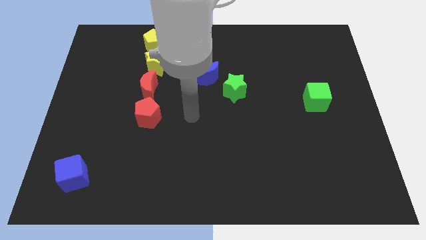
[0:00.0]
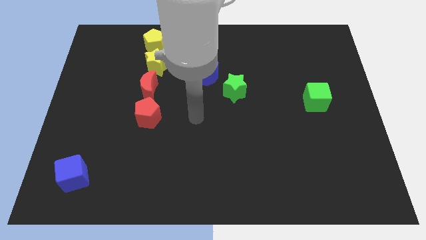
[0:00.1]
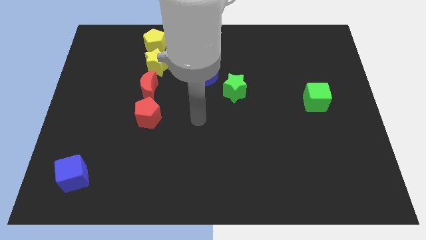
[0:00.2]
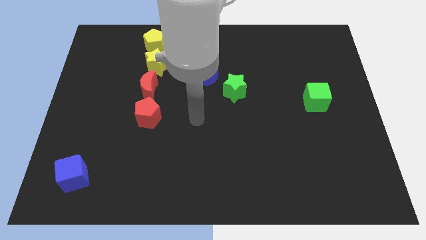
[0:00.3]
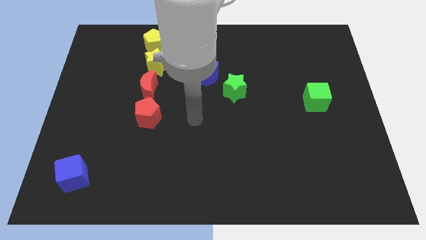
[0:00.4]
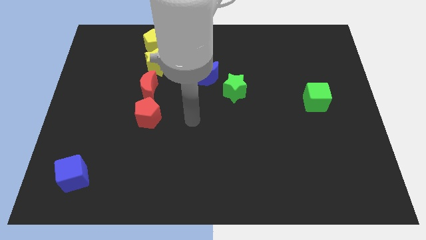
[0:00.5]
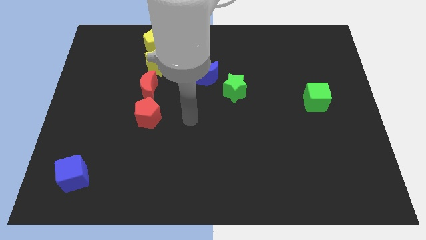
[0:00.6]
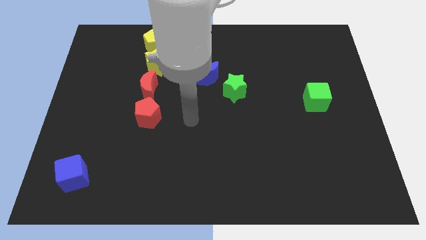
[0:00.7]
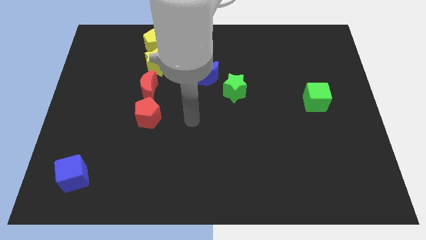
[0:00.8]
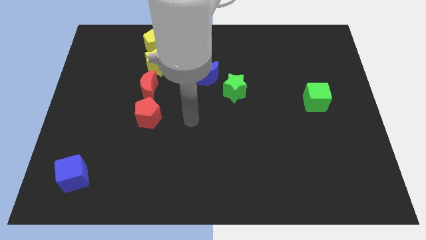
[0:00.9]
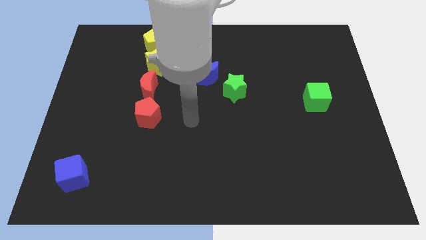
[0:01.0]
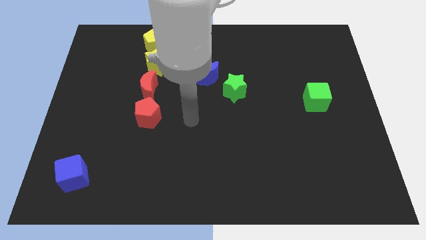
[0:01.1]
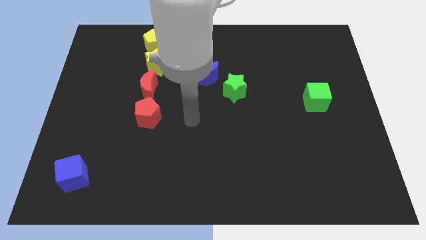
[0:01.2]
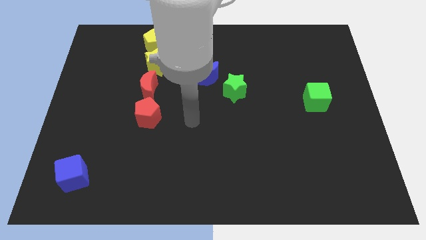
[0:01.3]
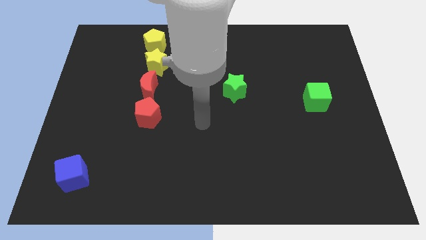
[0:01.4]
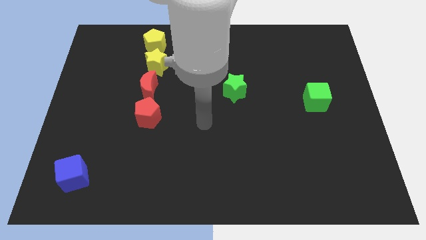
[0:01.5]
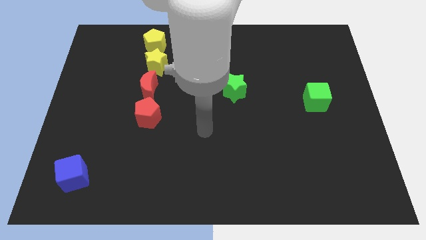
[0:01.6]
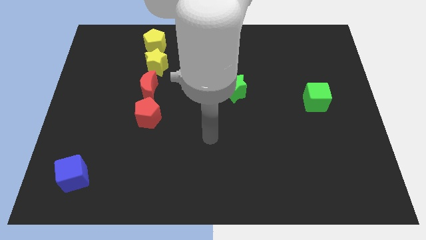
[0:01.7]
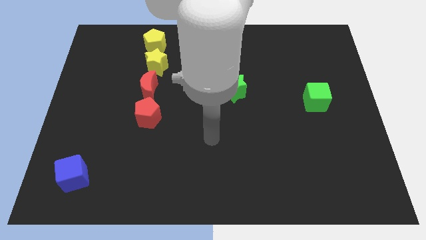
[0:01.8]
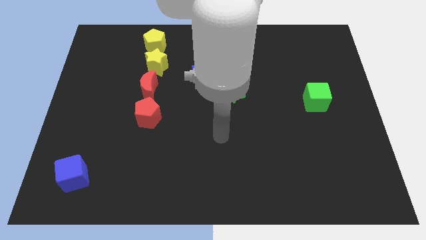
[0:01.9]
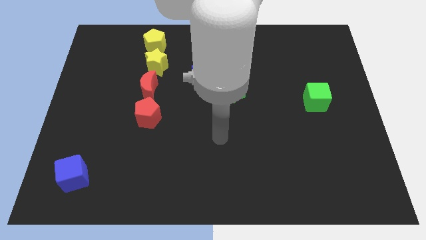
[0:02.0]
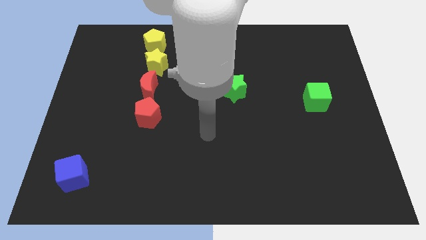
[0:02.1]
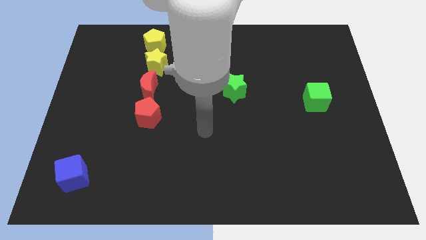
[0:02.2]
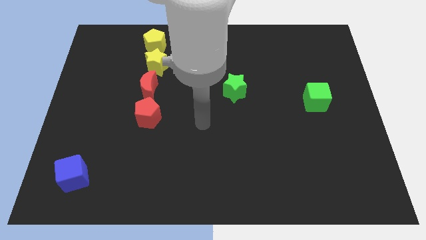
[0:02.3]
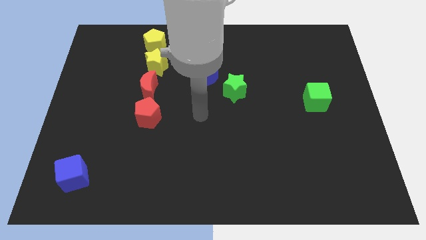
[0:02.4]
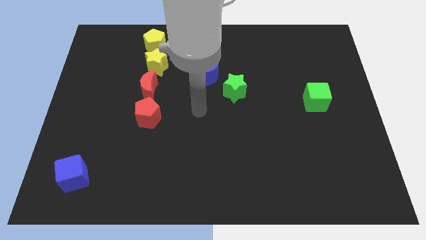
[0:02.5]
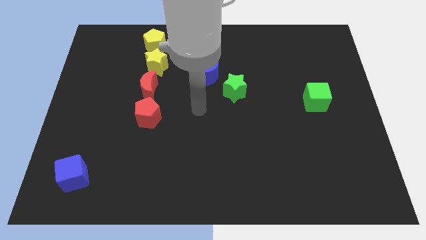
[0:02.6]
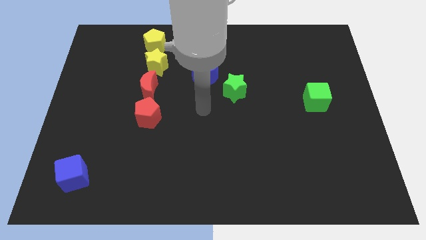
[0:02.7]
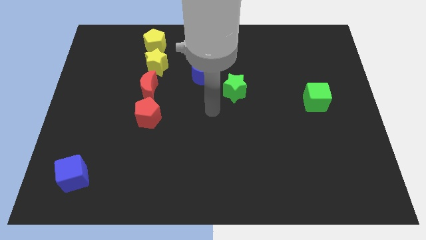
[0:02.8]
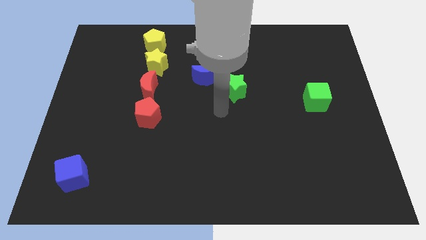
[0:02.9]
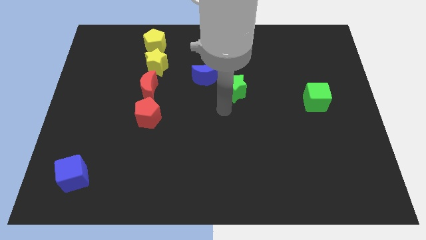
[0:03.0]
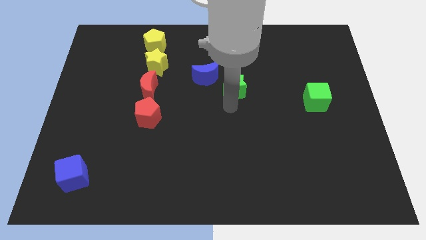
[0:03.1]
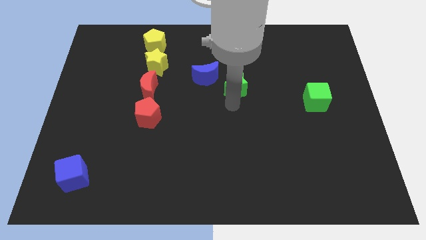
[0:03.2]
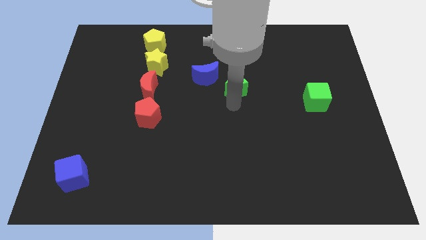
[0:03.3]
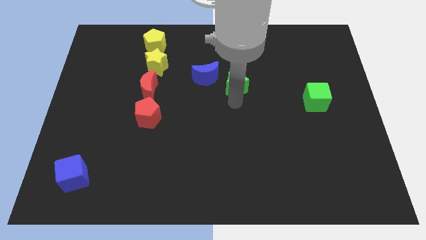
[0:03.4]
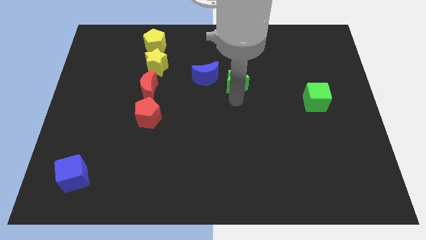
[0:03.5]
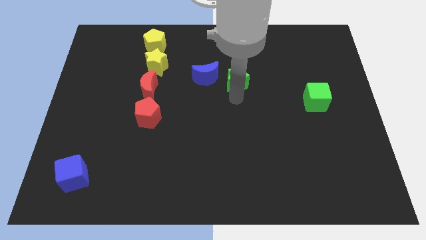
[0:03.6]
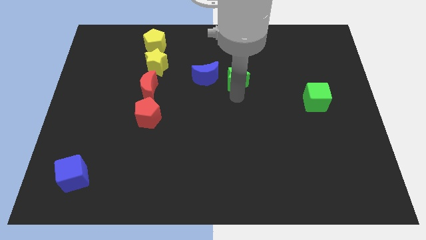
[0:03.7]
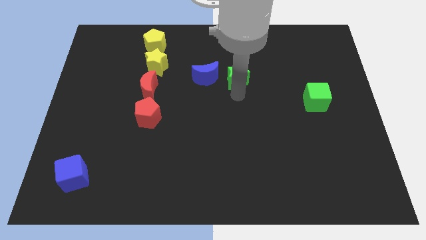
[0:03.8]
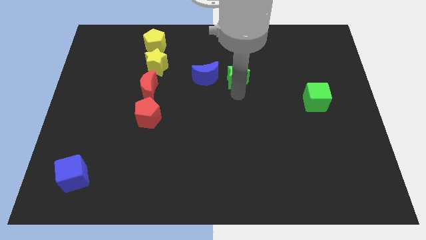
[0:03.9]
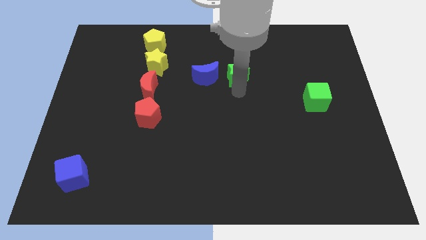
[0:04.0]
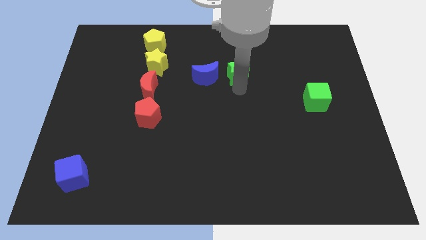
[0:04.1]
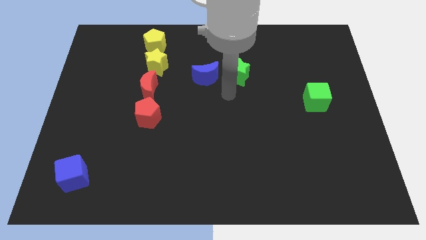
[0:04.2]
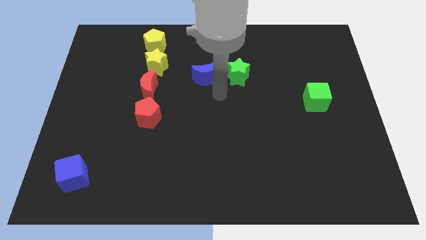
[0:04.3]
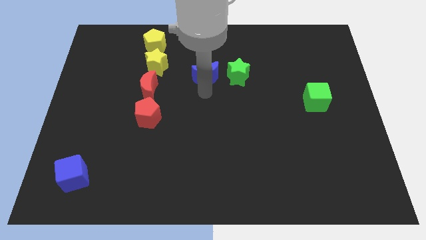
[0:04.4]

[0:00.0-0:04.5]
push the green star to the right of the blue crescent

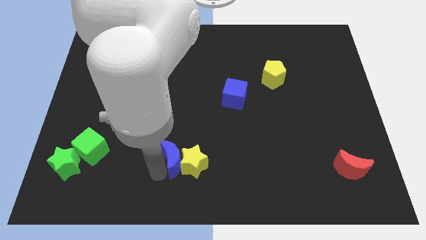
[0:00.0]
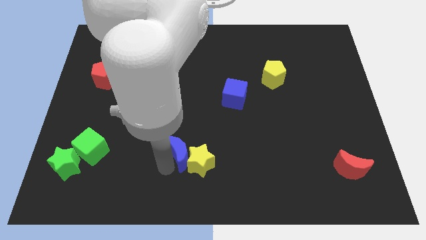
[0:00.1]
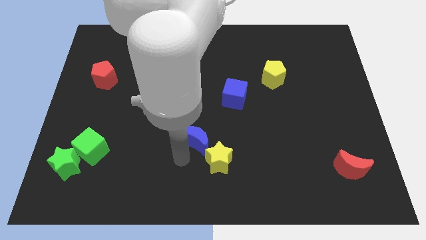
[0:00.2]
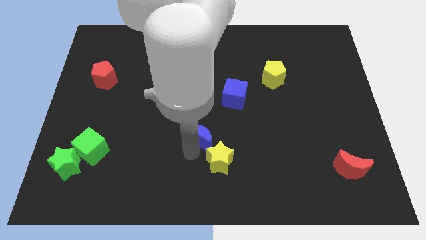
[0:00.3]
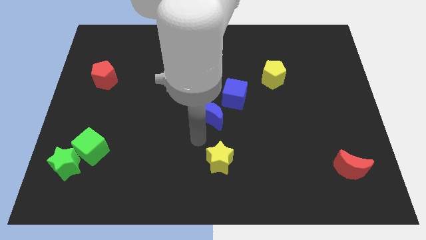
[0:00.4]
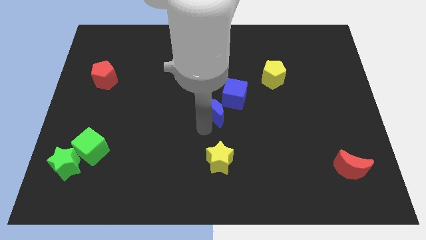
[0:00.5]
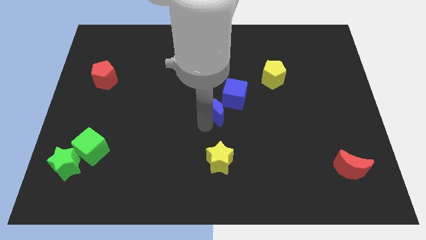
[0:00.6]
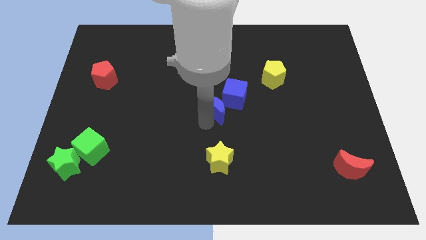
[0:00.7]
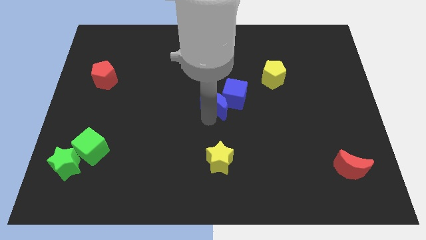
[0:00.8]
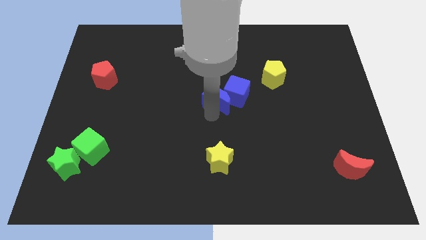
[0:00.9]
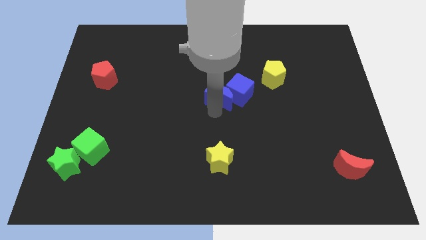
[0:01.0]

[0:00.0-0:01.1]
push the blue crescent into the blue cube

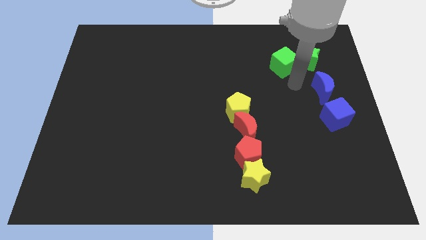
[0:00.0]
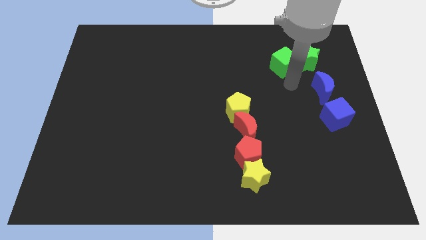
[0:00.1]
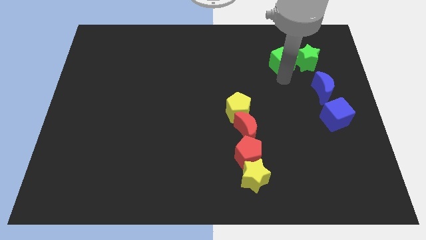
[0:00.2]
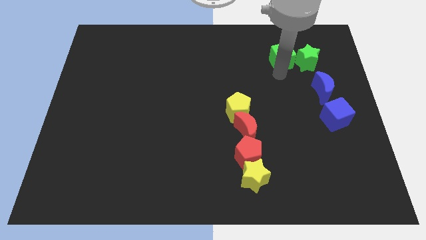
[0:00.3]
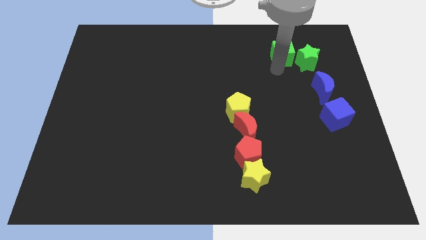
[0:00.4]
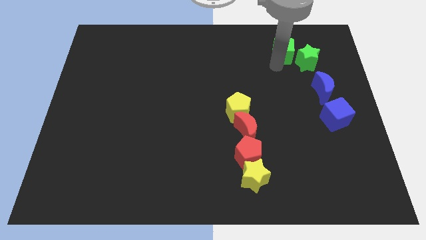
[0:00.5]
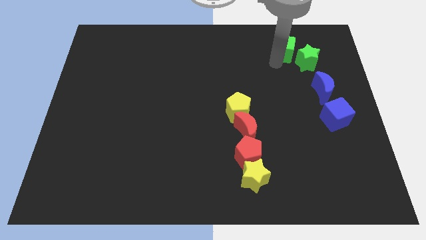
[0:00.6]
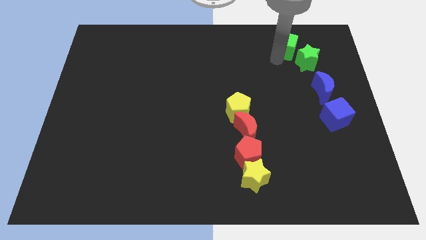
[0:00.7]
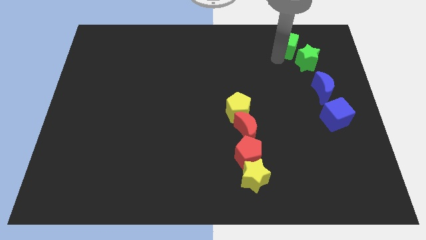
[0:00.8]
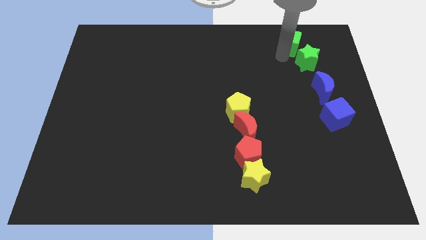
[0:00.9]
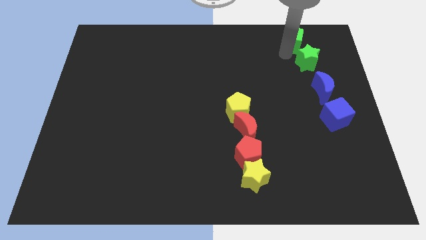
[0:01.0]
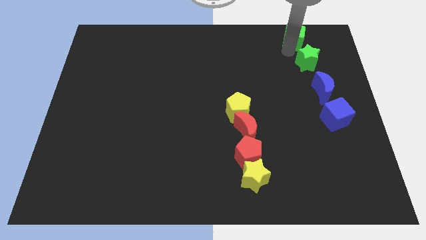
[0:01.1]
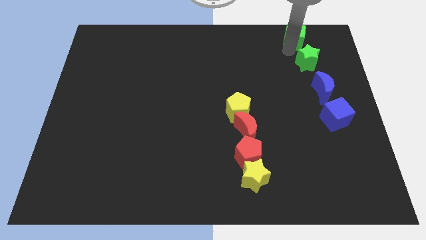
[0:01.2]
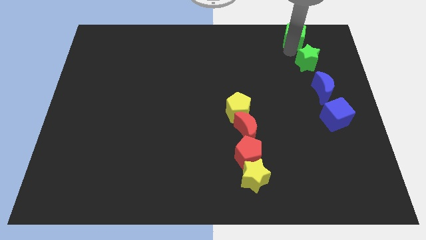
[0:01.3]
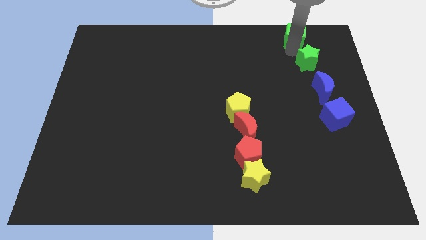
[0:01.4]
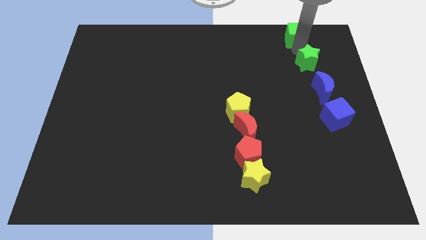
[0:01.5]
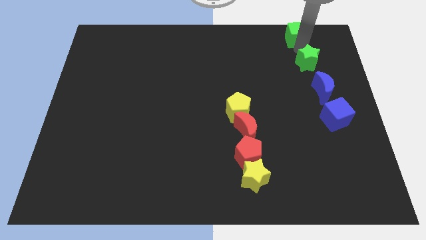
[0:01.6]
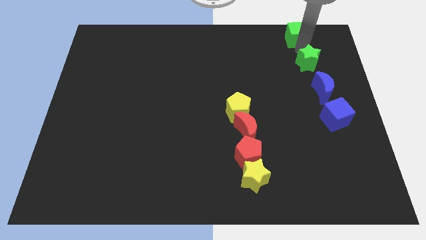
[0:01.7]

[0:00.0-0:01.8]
place the green cube above the green star

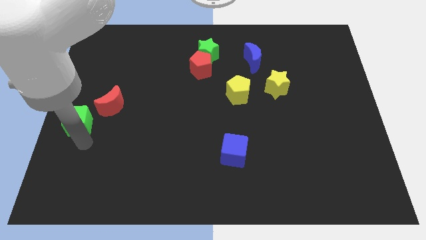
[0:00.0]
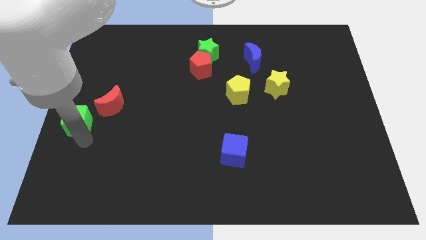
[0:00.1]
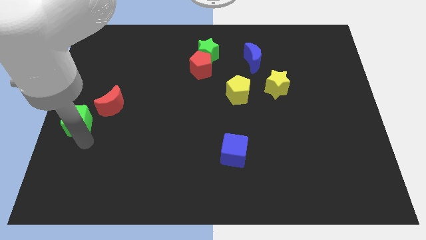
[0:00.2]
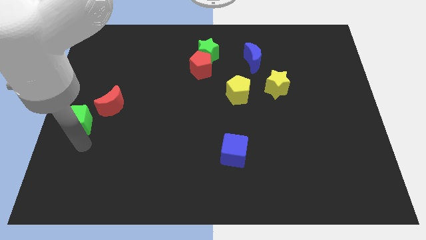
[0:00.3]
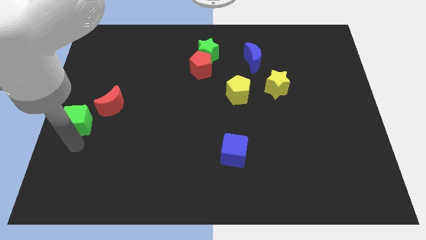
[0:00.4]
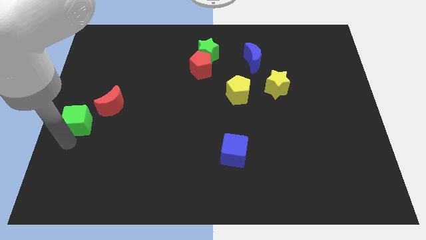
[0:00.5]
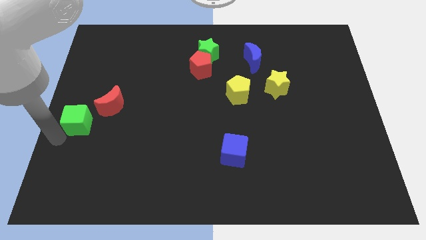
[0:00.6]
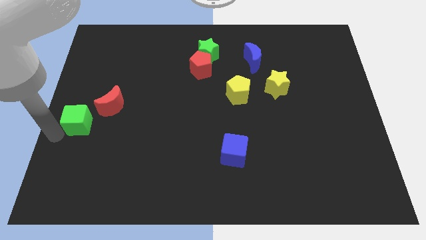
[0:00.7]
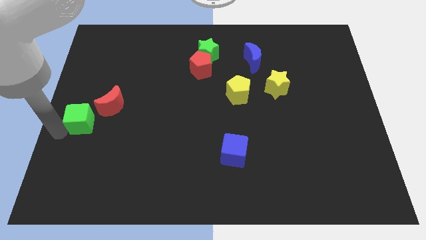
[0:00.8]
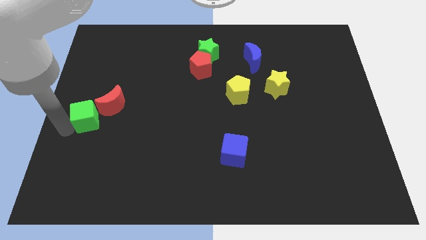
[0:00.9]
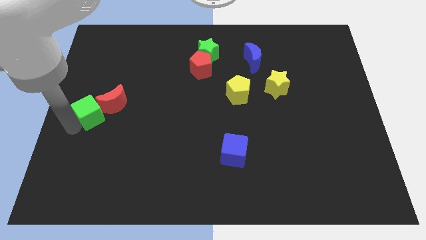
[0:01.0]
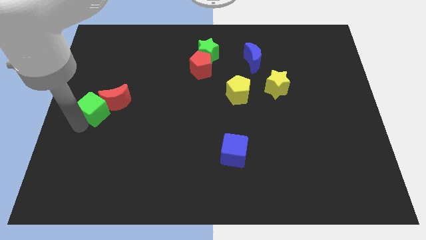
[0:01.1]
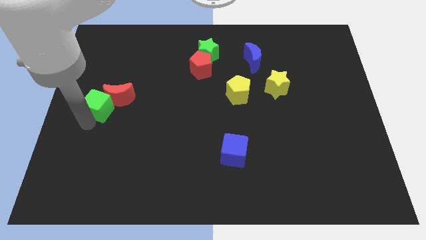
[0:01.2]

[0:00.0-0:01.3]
push green cube into red moon

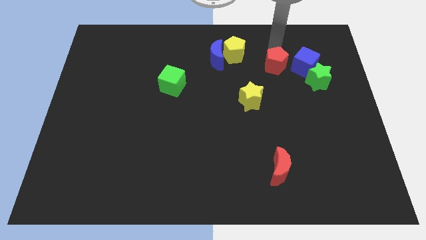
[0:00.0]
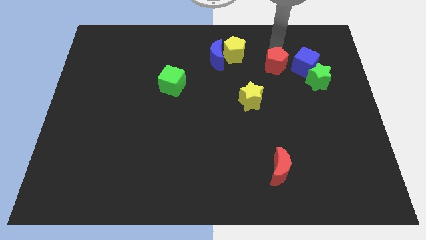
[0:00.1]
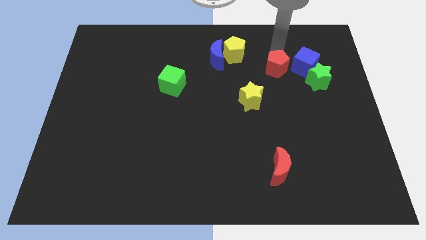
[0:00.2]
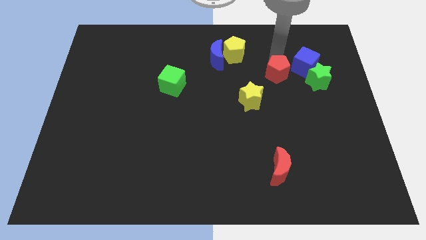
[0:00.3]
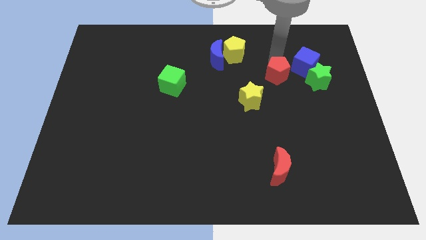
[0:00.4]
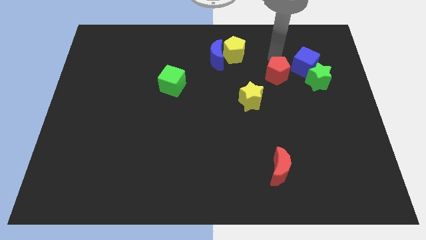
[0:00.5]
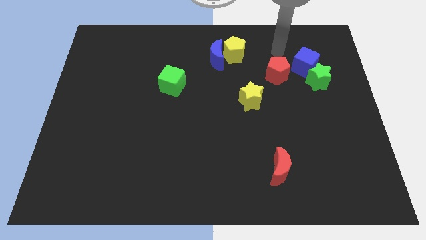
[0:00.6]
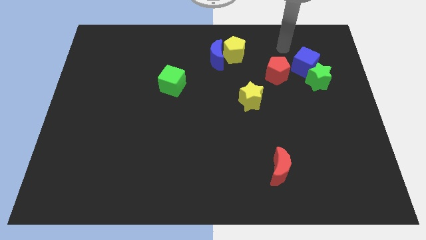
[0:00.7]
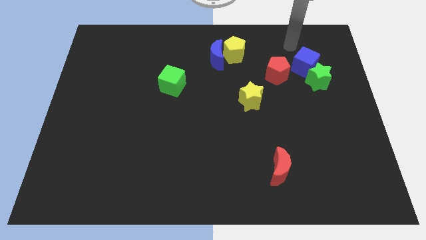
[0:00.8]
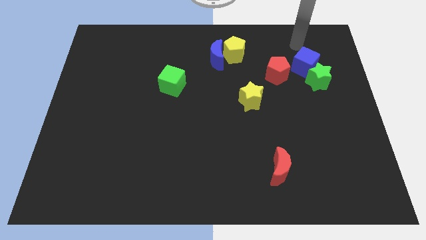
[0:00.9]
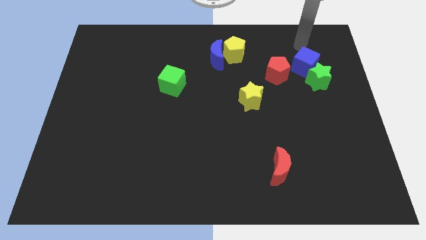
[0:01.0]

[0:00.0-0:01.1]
move the red pentagon down slightly
